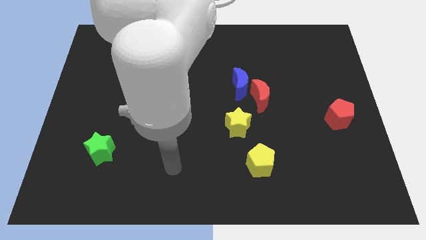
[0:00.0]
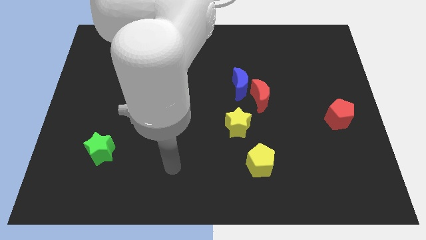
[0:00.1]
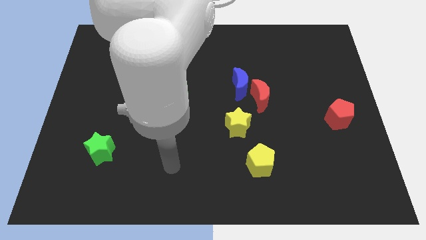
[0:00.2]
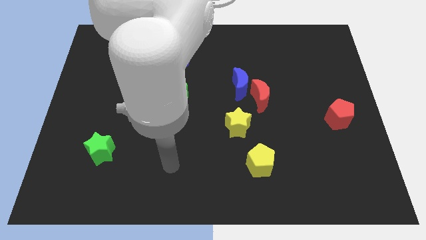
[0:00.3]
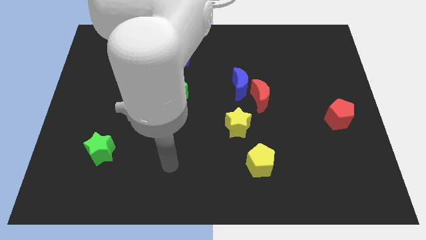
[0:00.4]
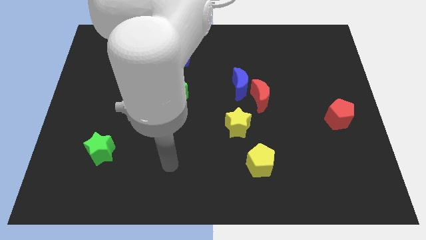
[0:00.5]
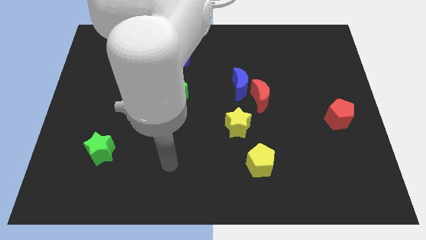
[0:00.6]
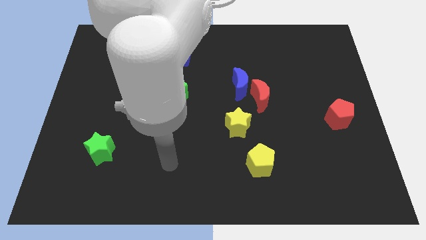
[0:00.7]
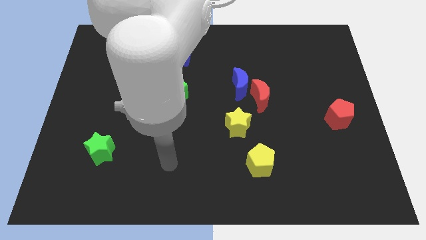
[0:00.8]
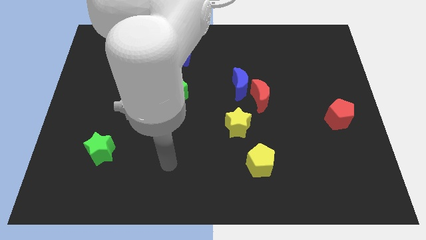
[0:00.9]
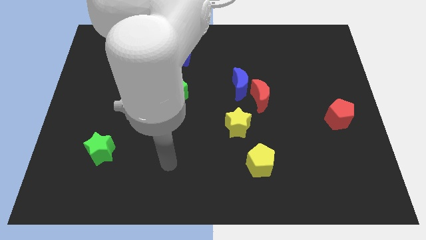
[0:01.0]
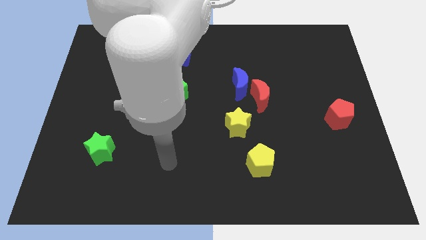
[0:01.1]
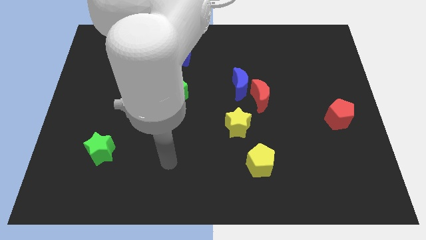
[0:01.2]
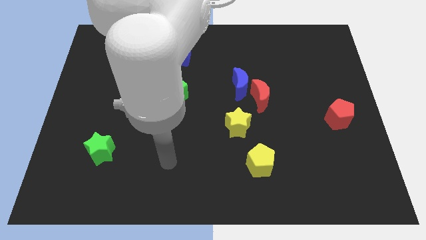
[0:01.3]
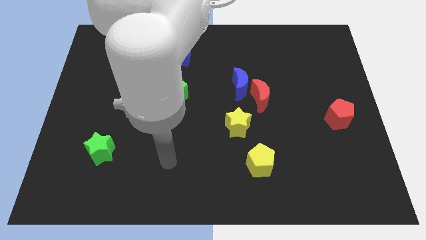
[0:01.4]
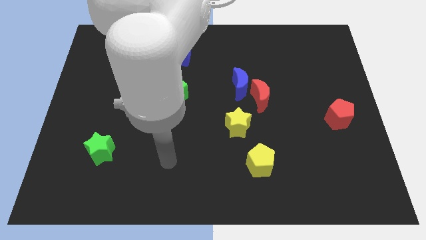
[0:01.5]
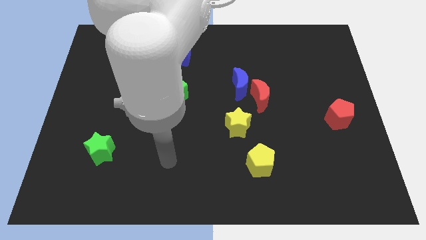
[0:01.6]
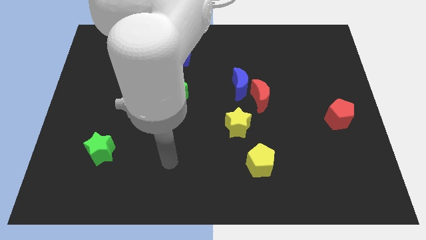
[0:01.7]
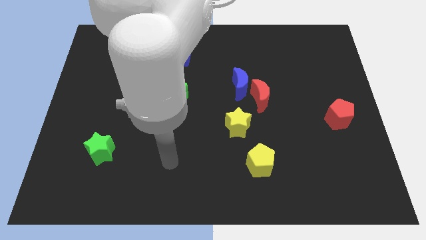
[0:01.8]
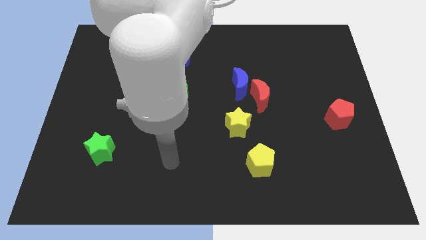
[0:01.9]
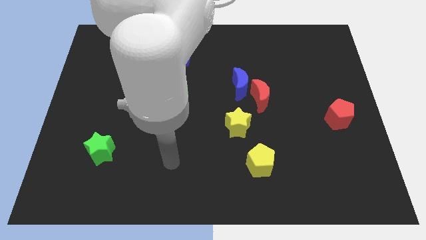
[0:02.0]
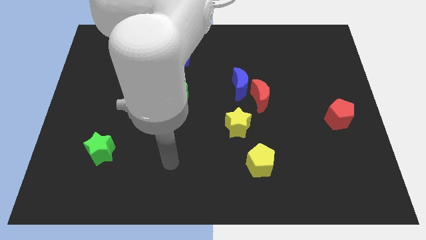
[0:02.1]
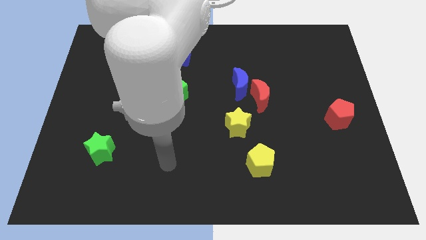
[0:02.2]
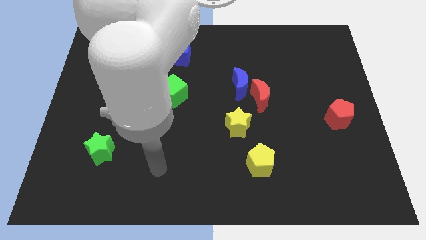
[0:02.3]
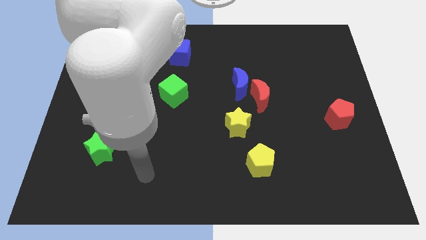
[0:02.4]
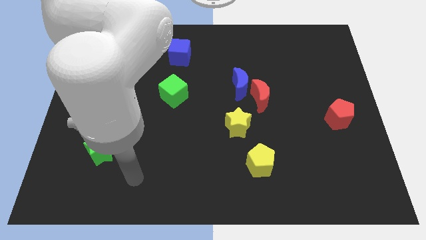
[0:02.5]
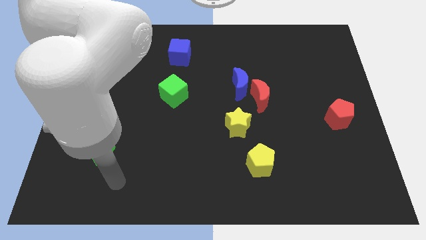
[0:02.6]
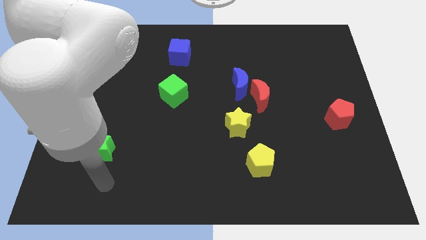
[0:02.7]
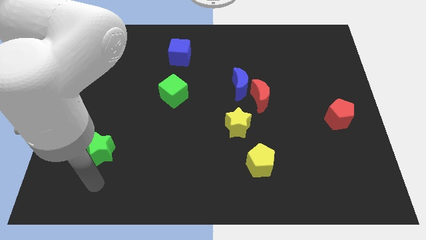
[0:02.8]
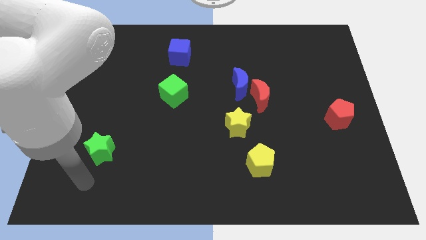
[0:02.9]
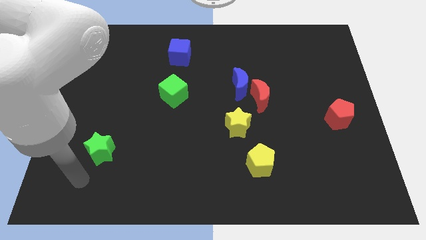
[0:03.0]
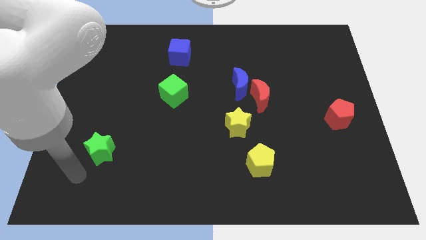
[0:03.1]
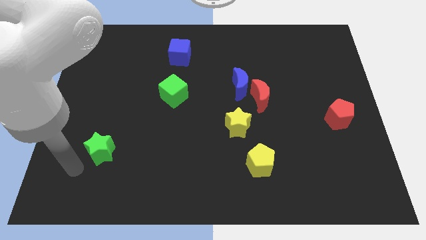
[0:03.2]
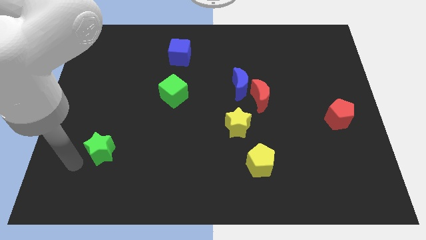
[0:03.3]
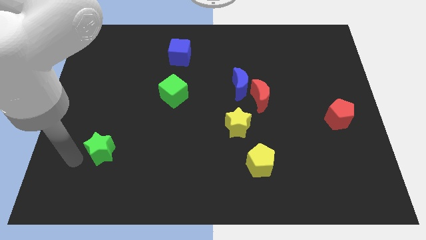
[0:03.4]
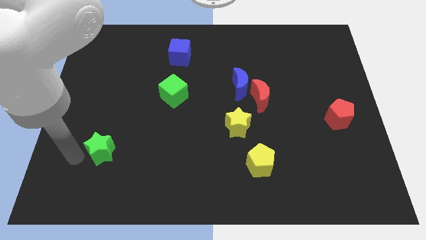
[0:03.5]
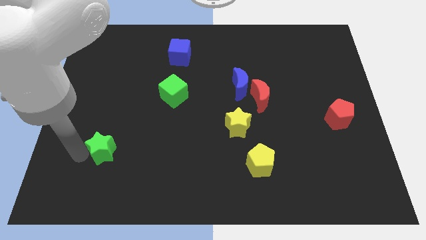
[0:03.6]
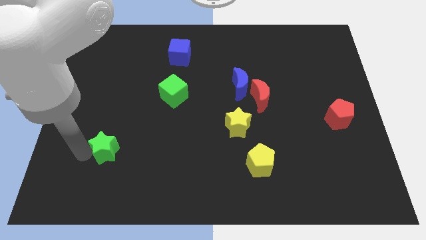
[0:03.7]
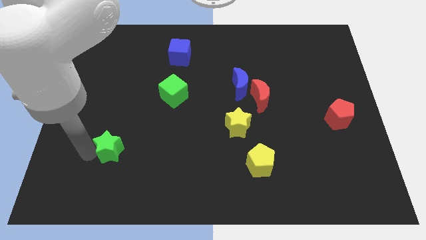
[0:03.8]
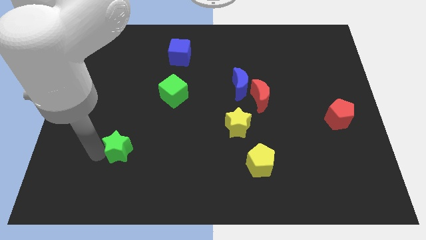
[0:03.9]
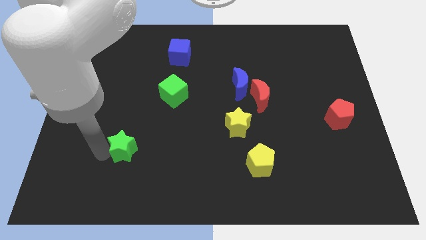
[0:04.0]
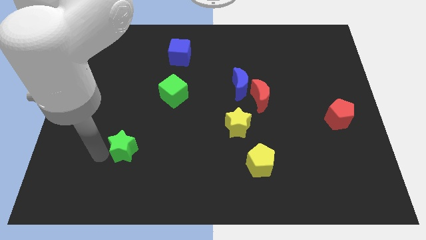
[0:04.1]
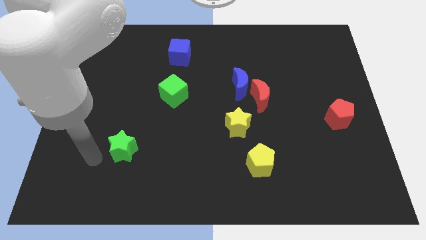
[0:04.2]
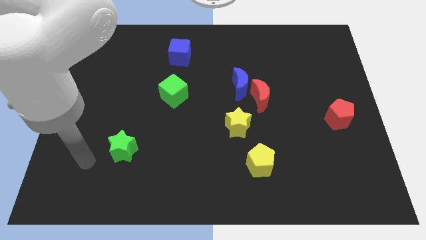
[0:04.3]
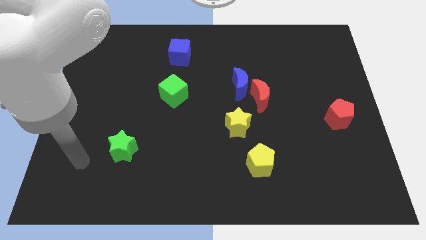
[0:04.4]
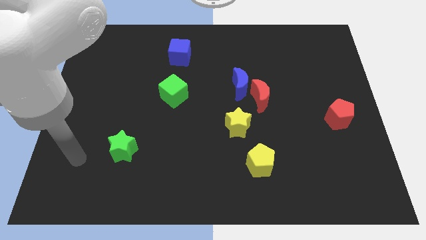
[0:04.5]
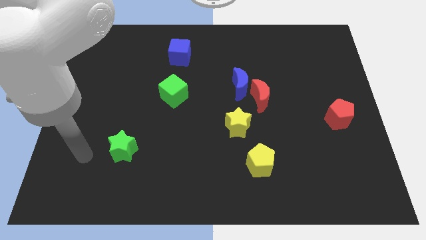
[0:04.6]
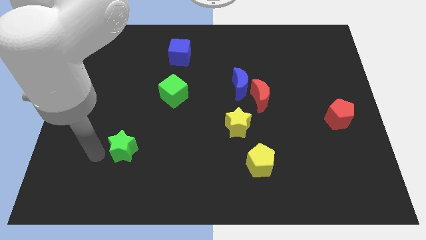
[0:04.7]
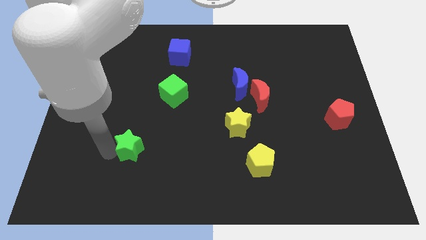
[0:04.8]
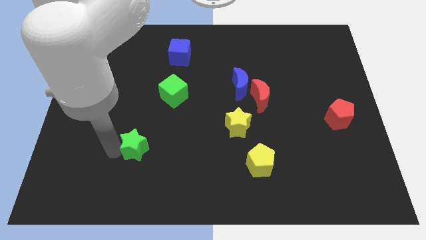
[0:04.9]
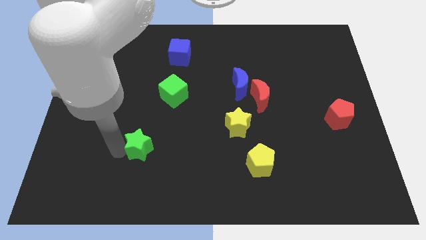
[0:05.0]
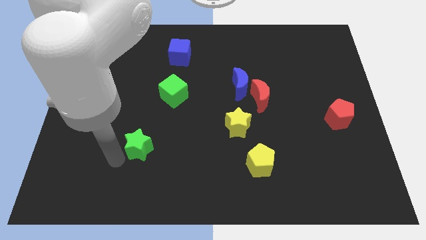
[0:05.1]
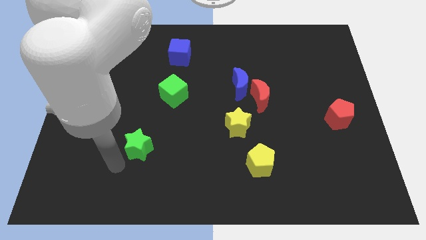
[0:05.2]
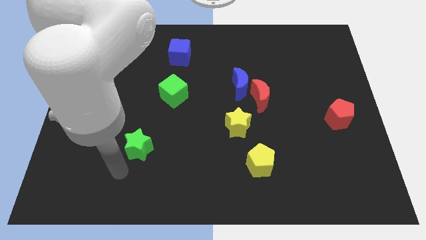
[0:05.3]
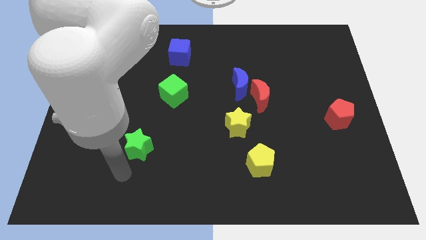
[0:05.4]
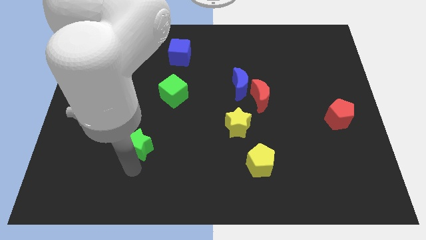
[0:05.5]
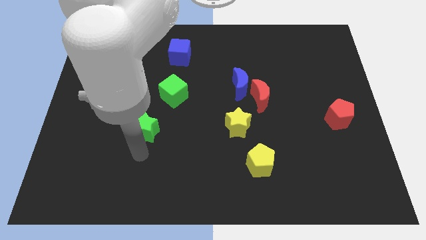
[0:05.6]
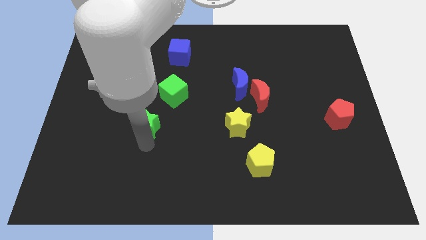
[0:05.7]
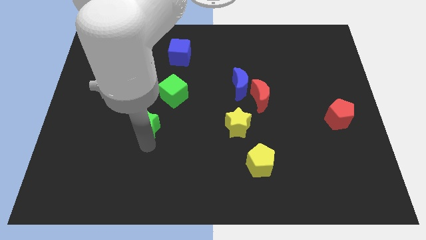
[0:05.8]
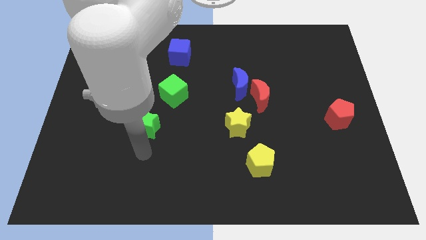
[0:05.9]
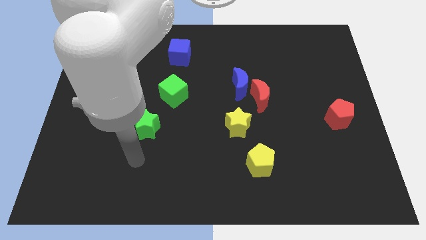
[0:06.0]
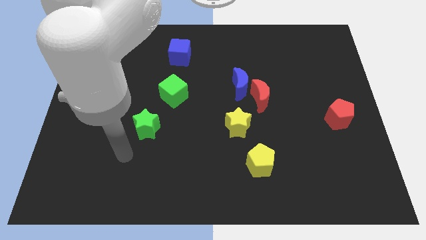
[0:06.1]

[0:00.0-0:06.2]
push green star slightly upwards

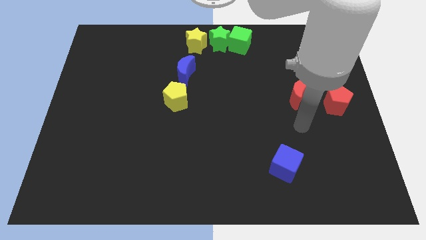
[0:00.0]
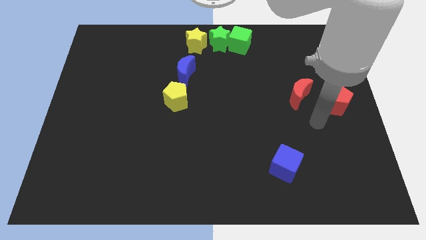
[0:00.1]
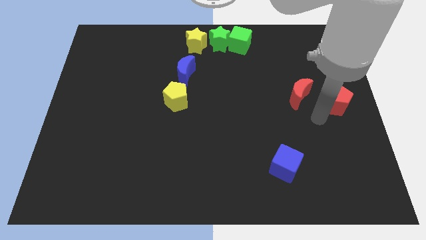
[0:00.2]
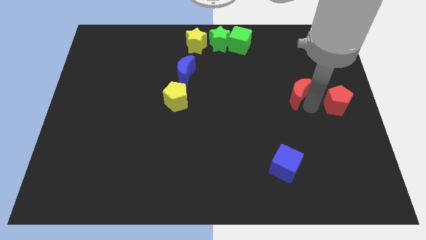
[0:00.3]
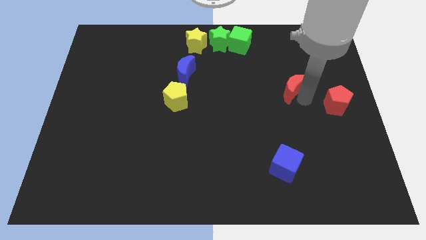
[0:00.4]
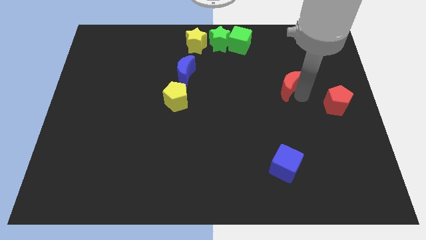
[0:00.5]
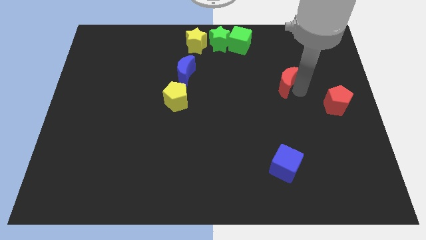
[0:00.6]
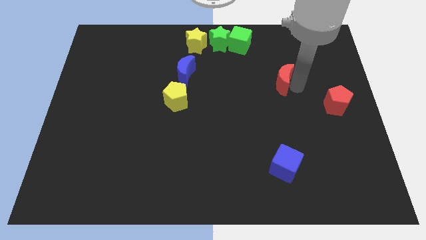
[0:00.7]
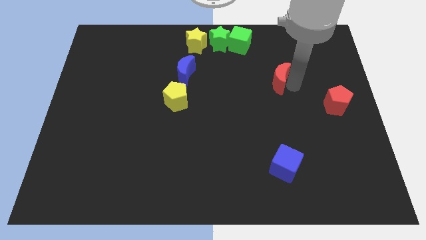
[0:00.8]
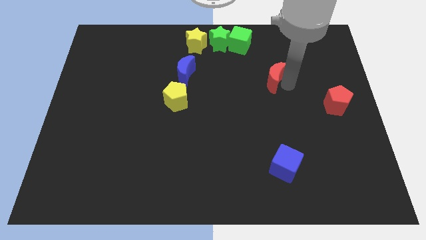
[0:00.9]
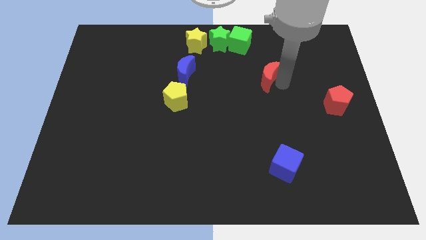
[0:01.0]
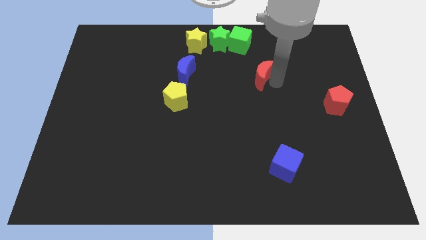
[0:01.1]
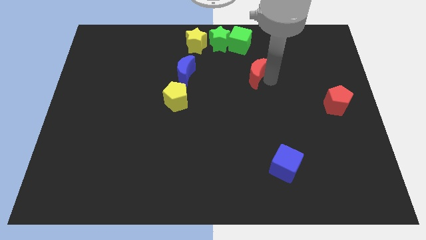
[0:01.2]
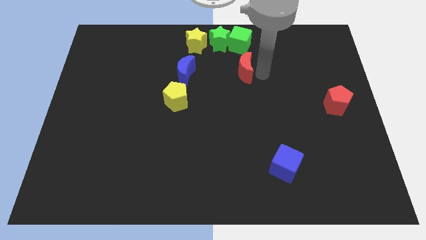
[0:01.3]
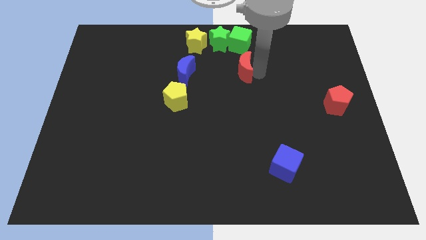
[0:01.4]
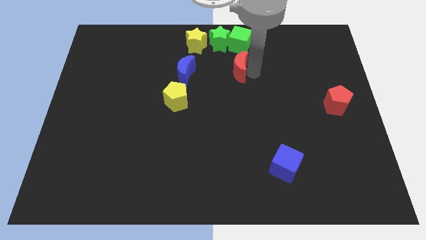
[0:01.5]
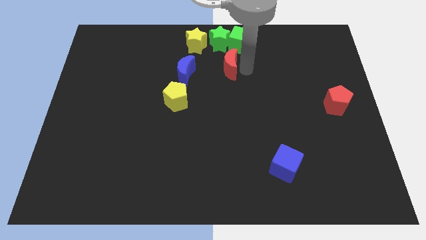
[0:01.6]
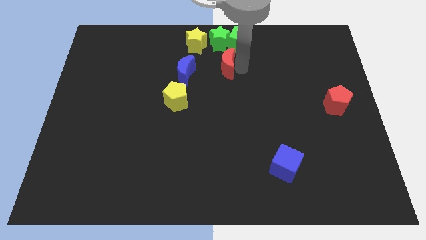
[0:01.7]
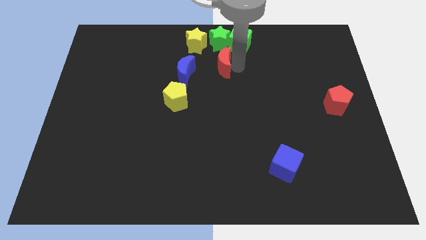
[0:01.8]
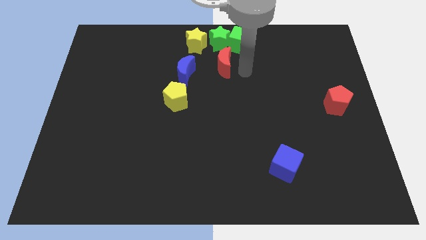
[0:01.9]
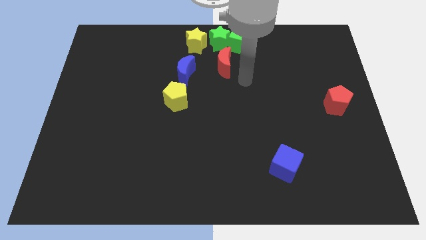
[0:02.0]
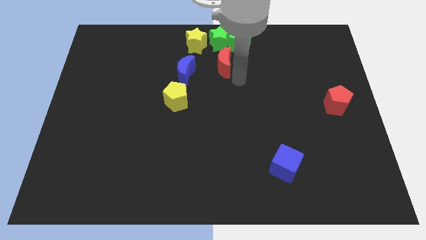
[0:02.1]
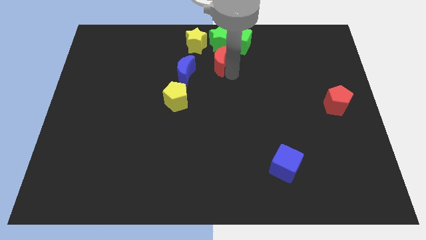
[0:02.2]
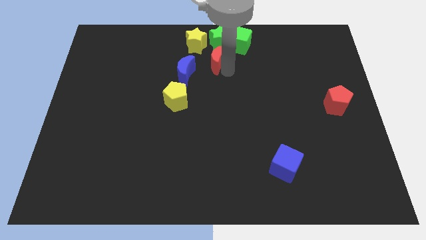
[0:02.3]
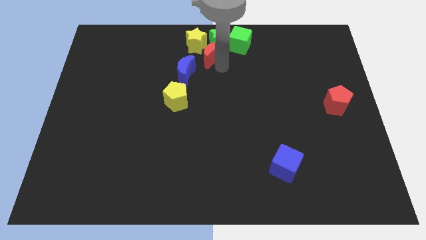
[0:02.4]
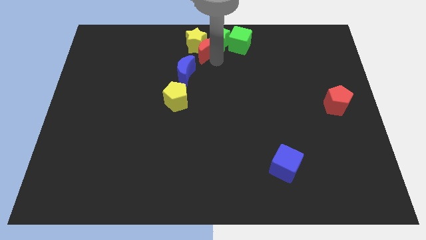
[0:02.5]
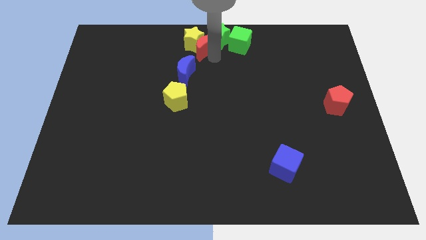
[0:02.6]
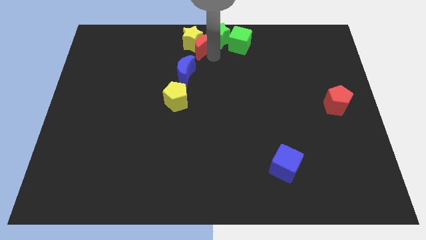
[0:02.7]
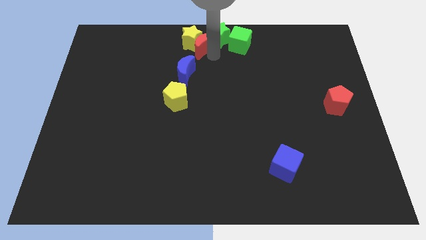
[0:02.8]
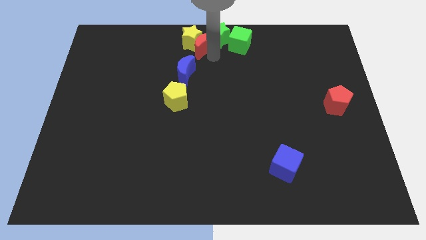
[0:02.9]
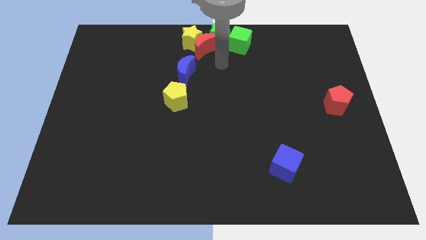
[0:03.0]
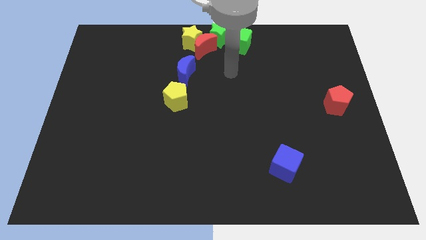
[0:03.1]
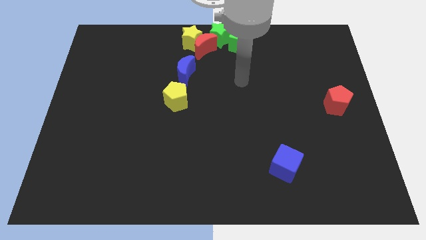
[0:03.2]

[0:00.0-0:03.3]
push the red moon into the yellow star
